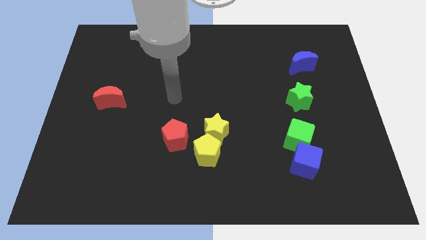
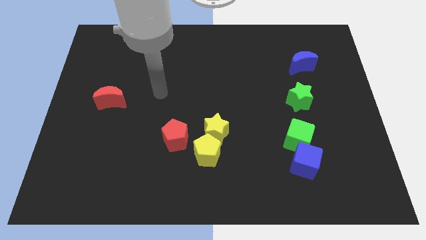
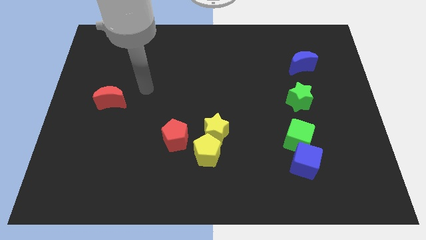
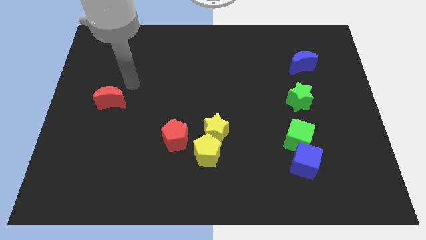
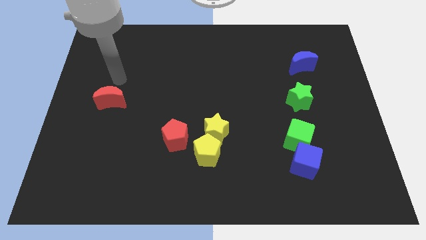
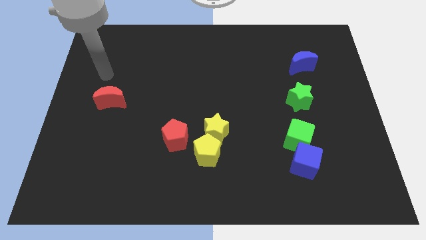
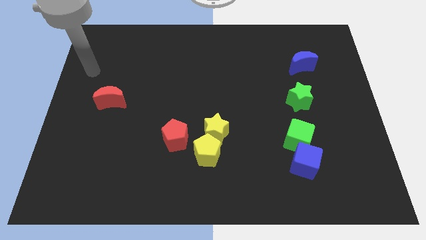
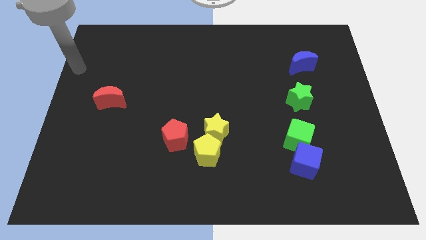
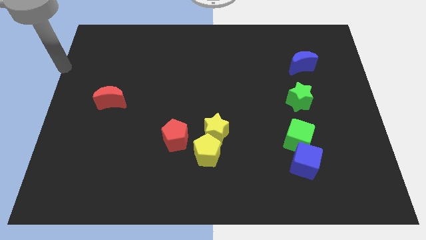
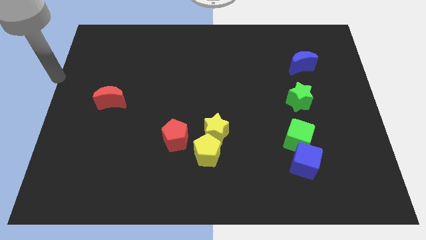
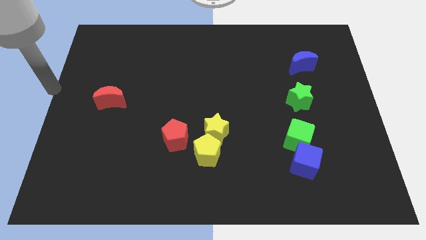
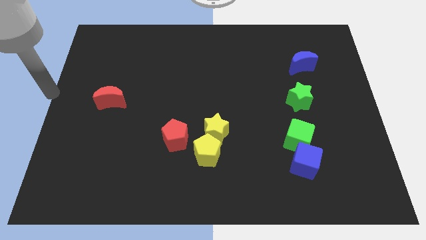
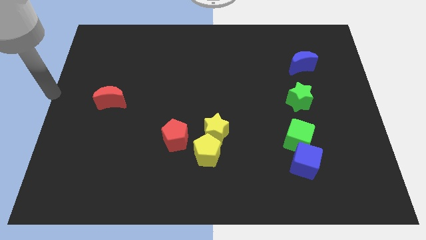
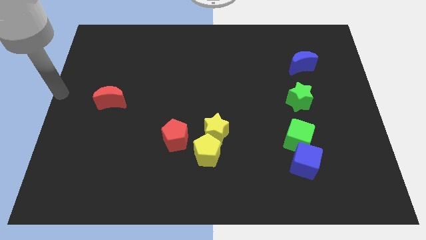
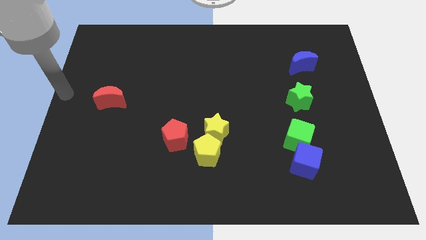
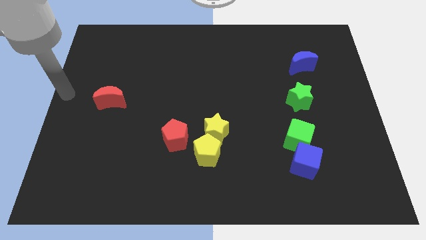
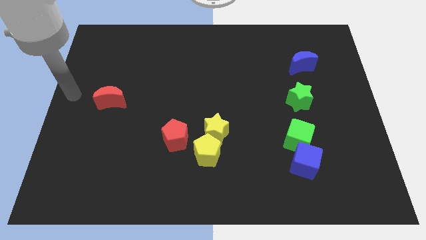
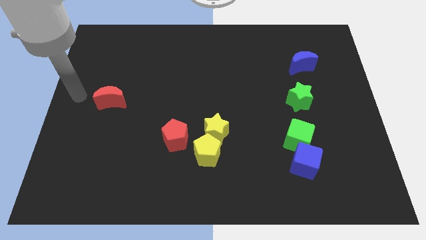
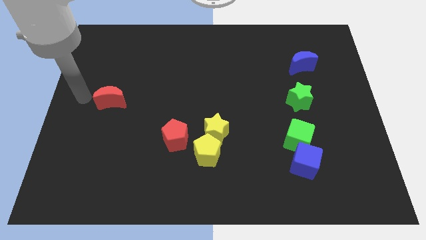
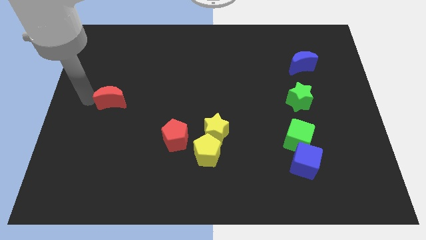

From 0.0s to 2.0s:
point your arm to the left of red moon

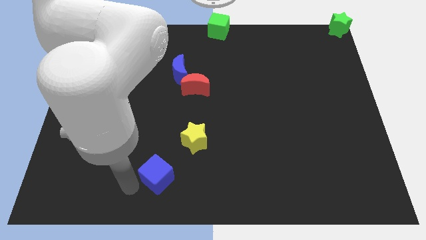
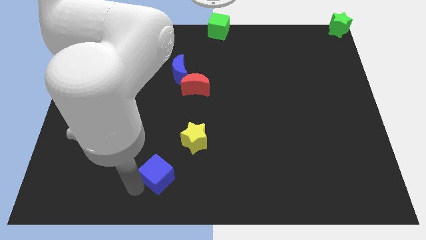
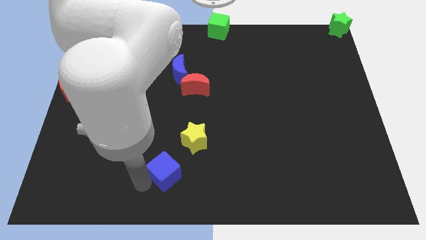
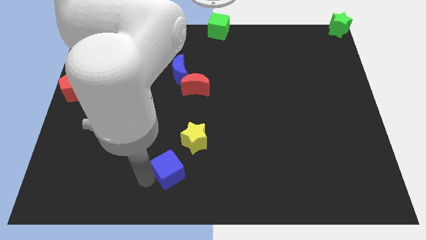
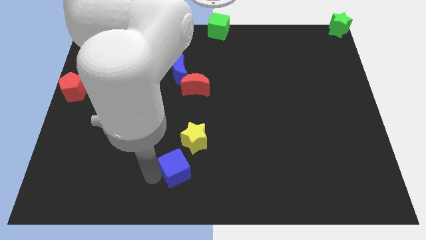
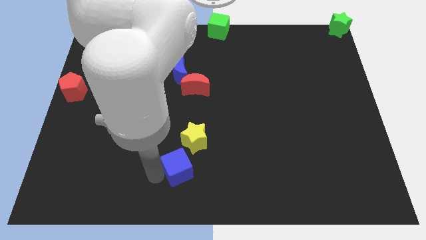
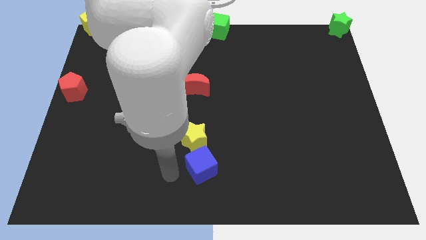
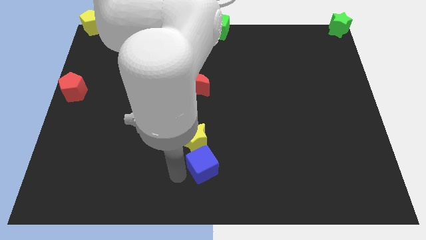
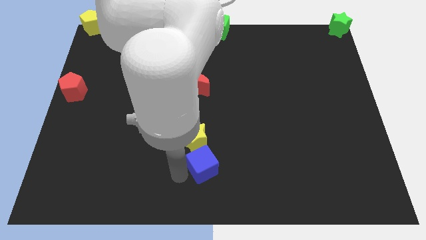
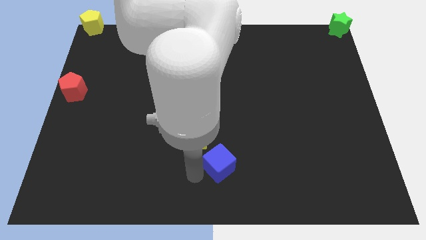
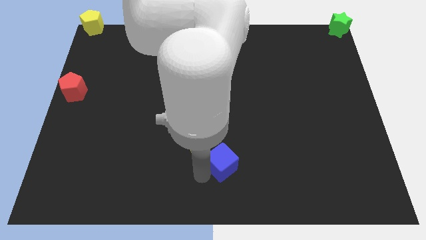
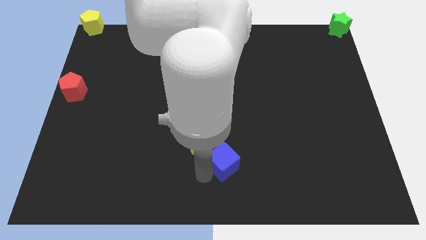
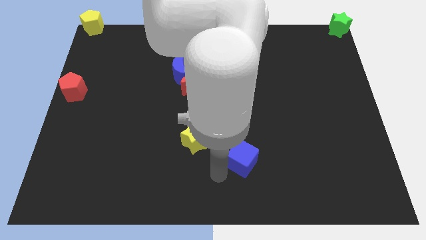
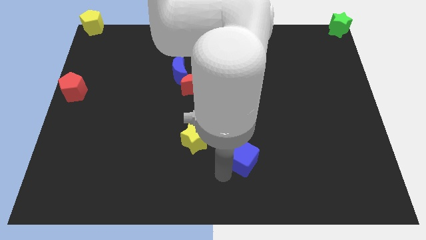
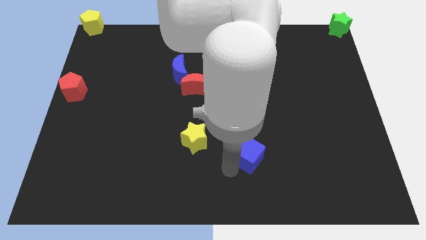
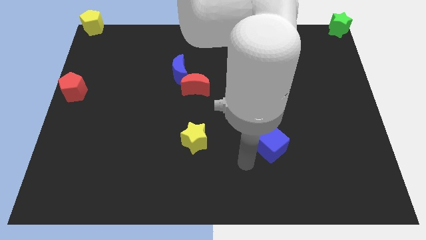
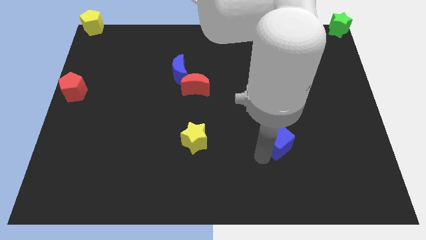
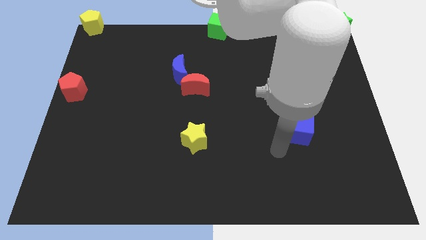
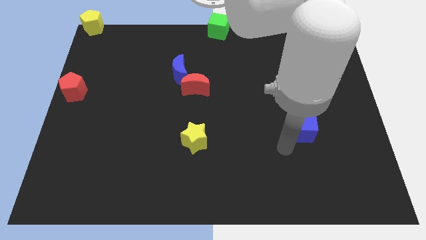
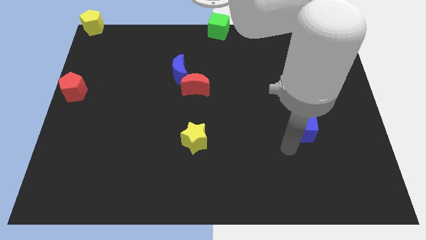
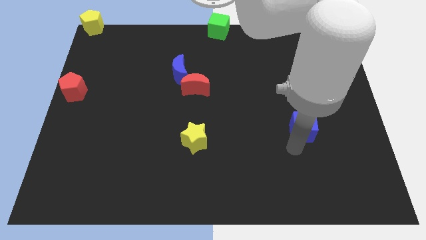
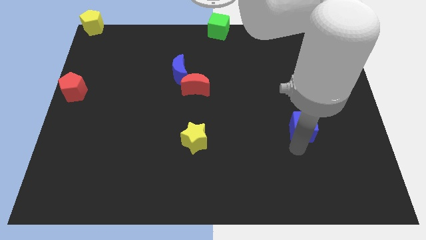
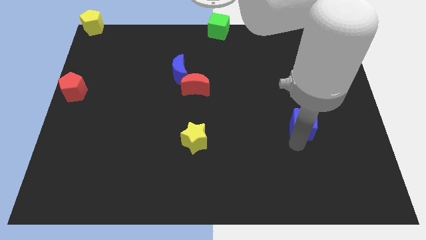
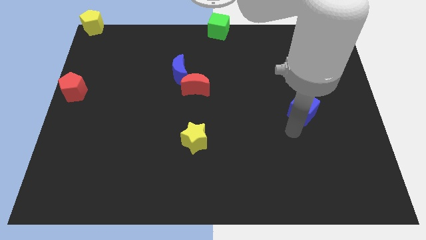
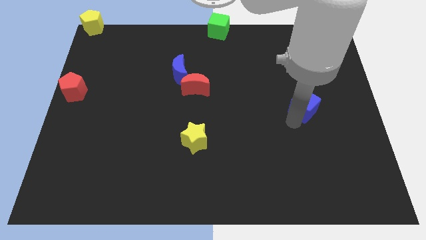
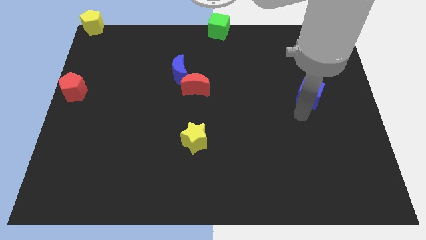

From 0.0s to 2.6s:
push the blue cube to the right center of the board

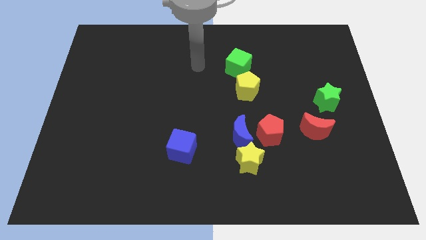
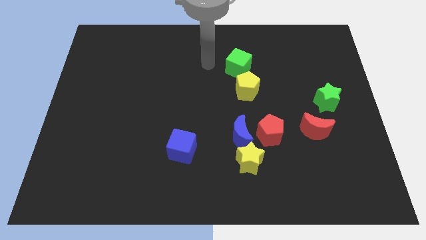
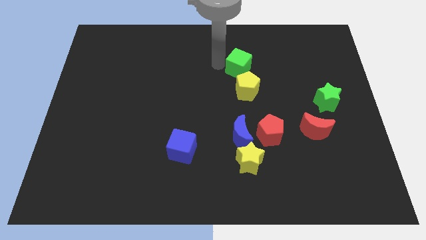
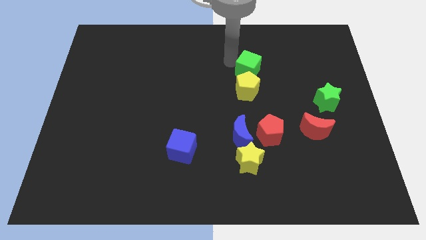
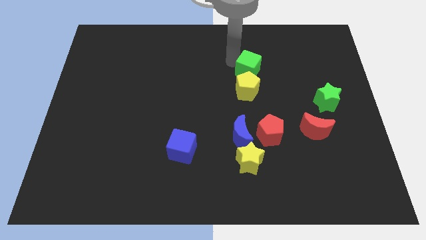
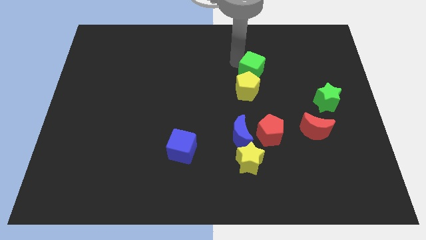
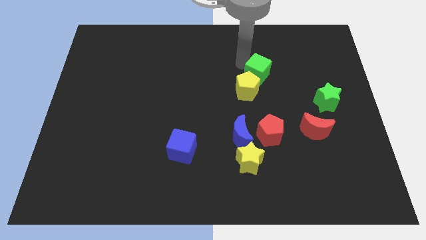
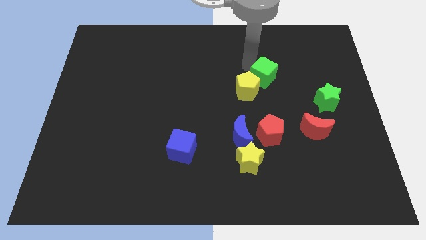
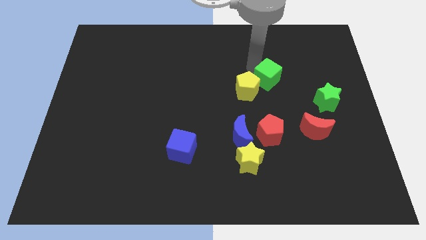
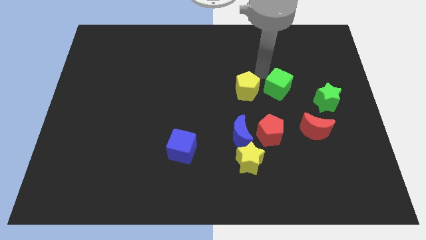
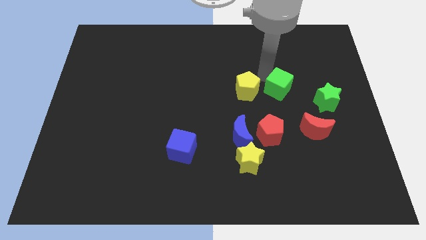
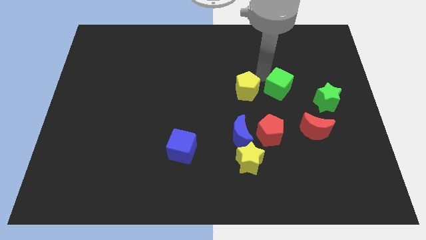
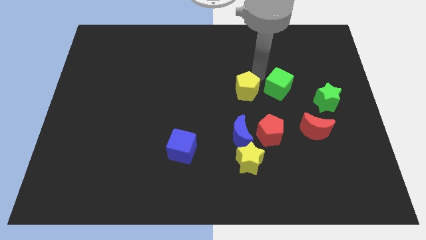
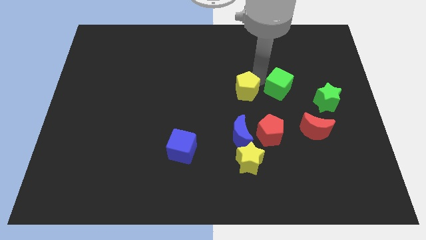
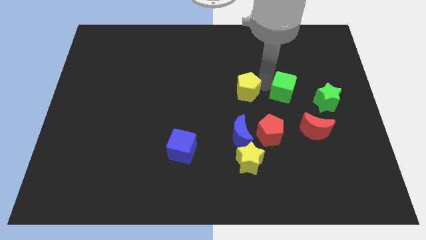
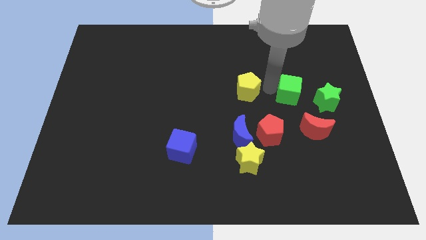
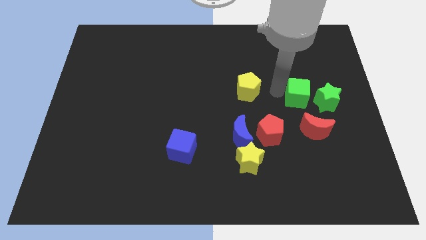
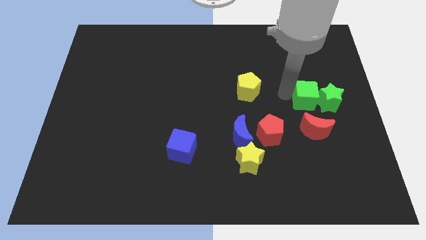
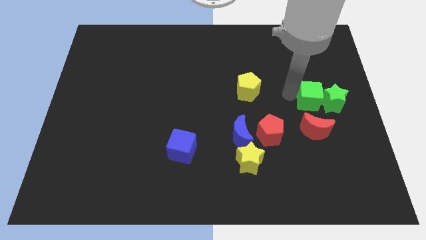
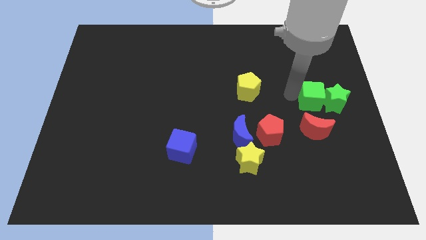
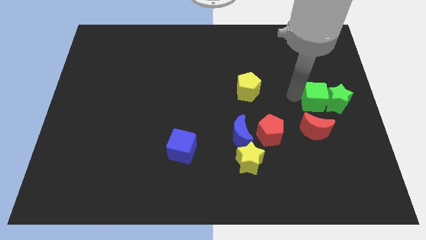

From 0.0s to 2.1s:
move the green cube towards the left side of the green star

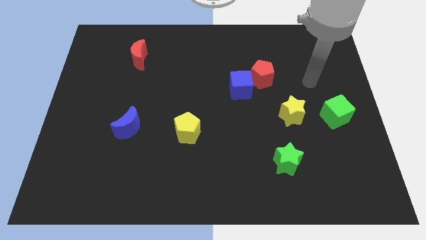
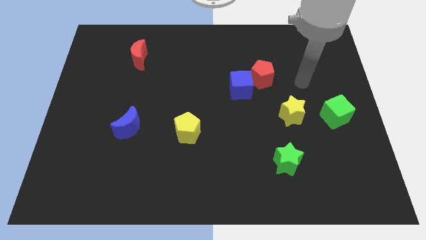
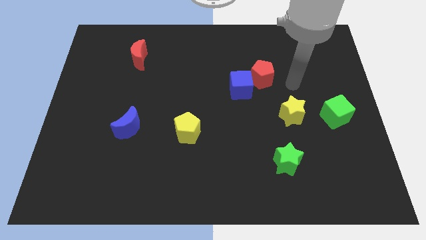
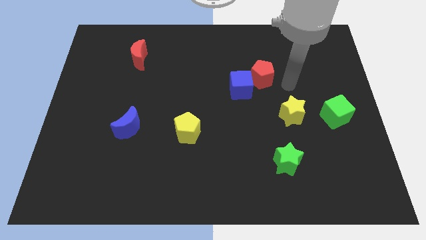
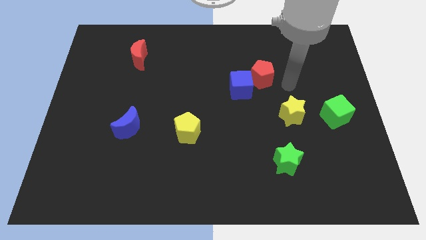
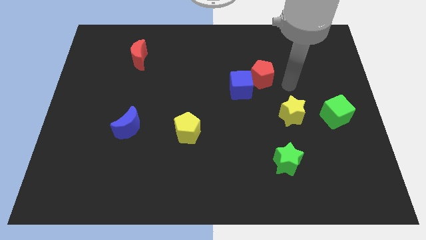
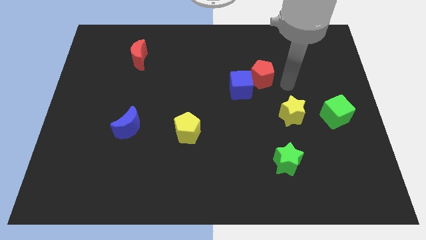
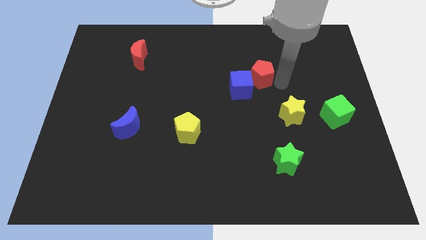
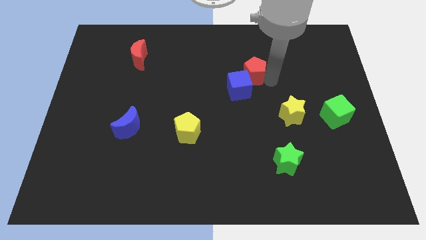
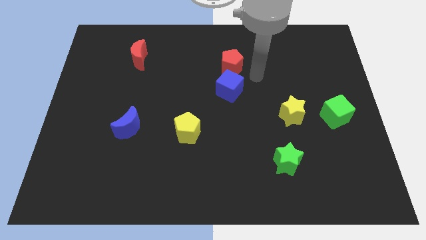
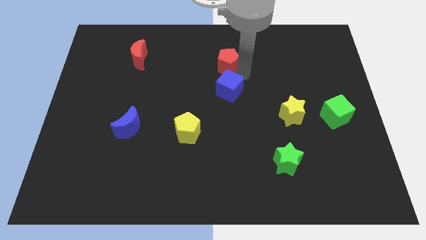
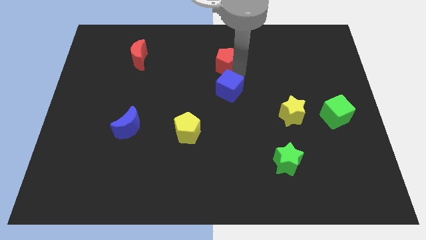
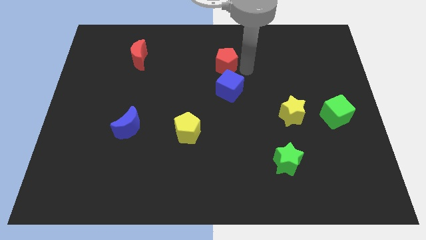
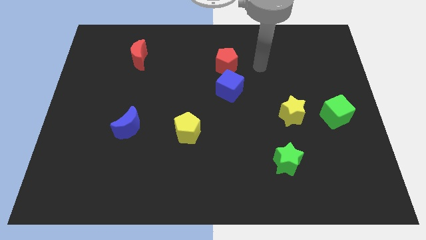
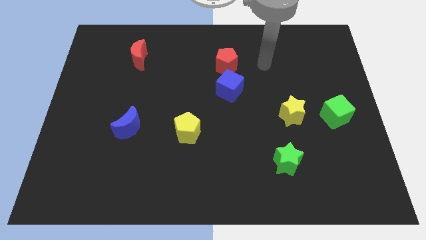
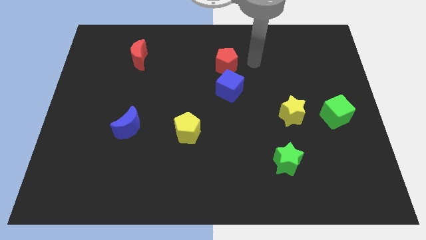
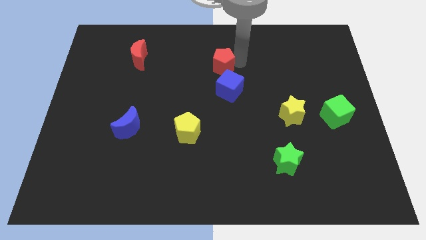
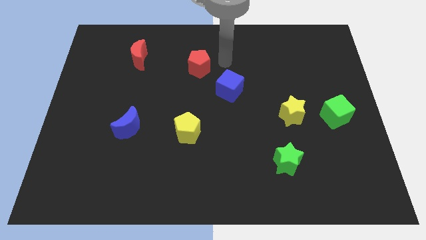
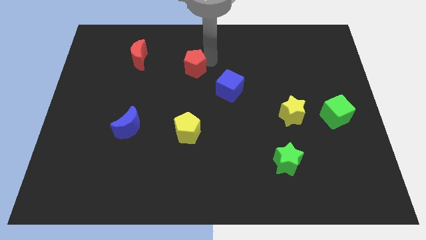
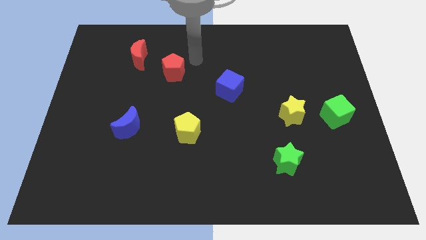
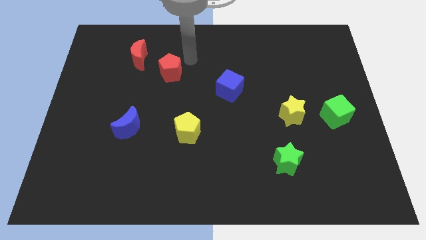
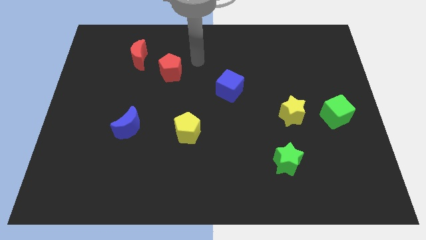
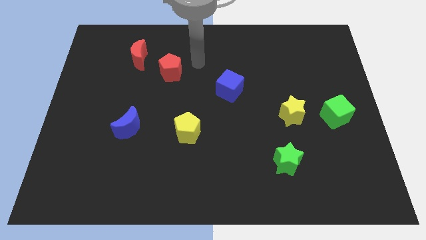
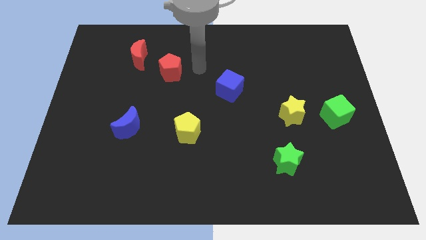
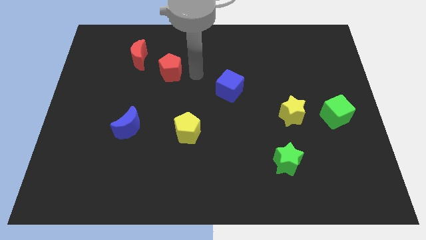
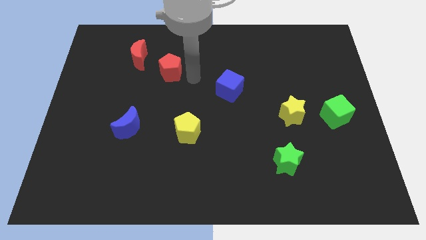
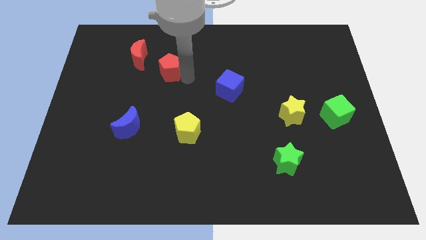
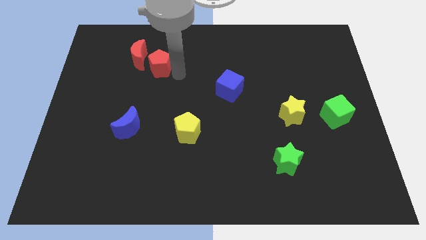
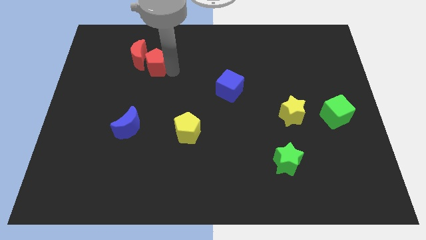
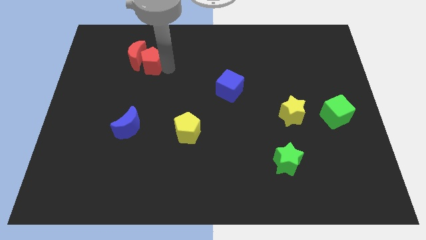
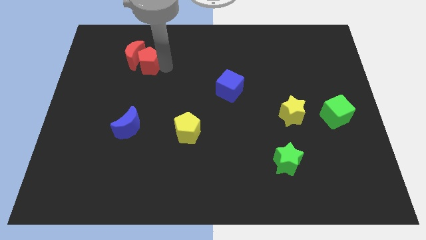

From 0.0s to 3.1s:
push the red pentagon into the red crescent
